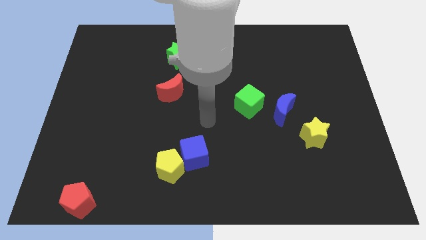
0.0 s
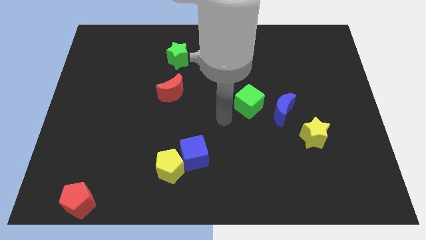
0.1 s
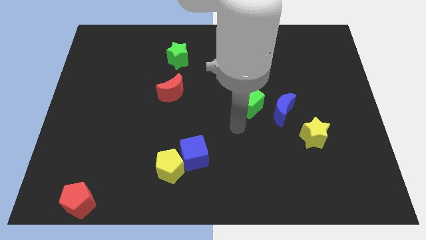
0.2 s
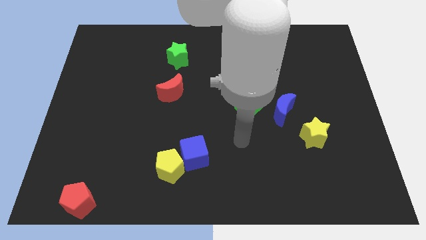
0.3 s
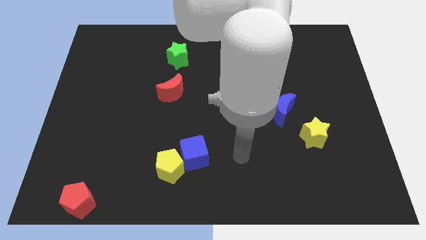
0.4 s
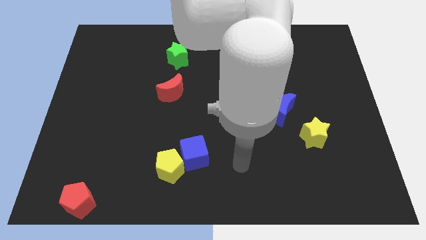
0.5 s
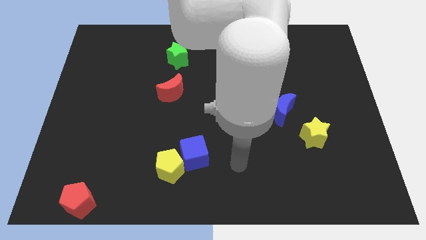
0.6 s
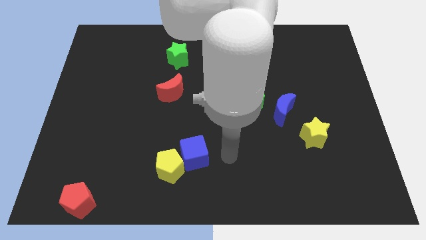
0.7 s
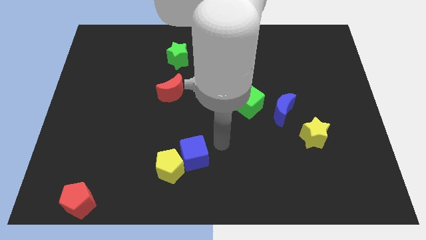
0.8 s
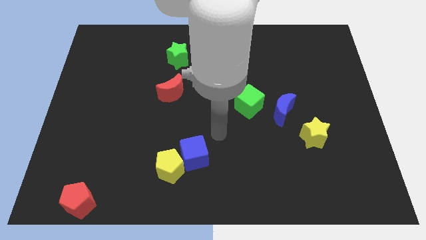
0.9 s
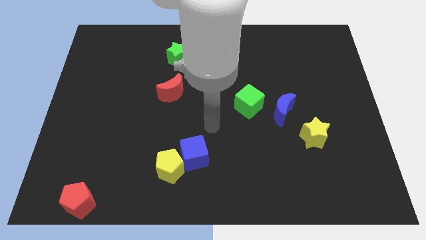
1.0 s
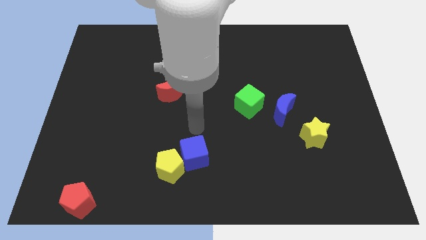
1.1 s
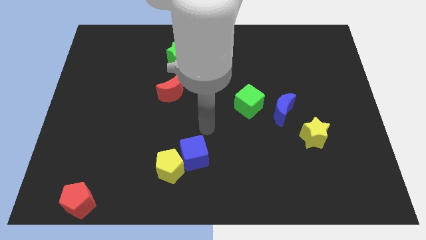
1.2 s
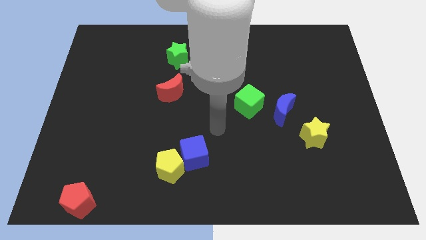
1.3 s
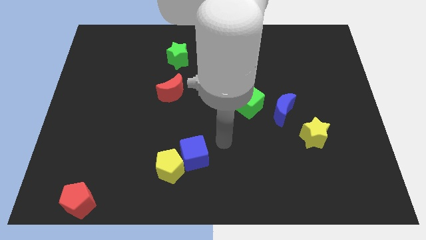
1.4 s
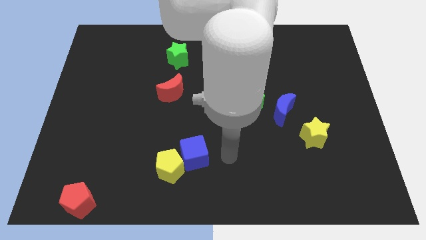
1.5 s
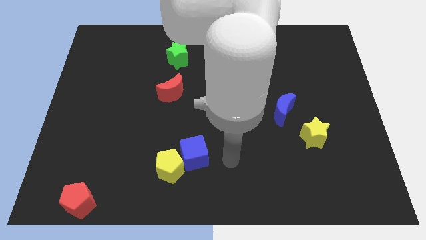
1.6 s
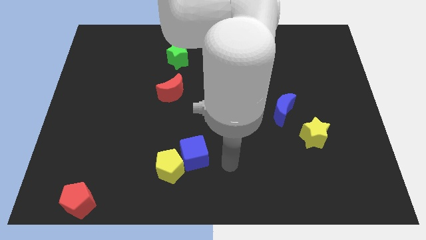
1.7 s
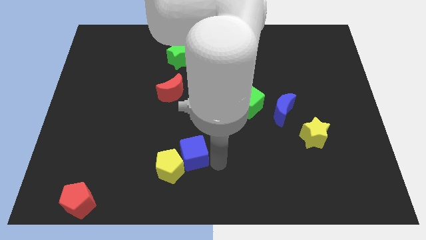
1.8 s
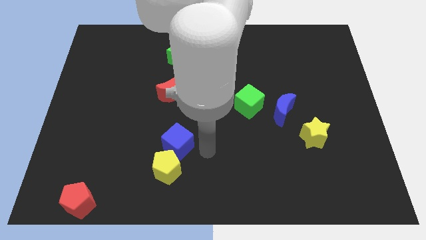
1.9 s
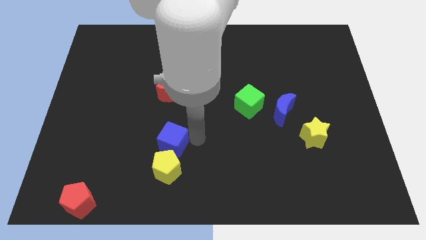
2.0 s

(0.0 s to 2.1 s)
move blue cube to the top of yellow pentagon

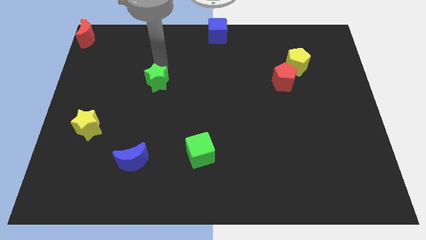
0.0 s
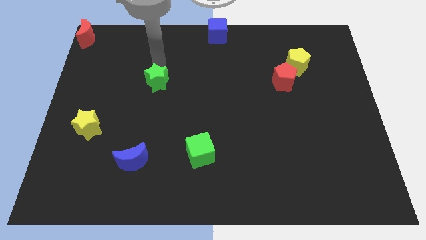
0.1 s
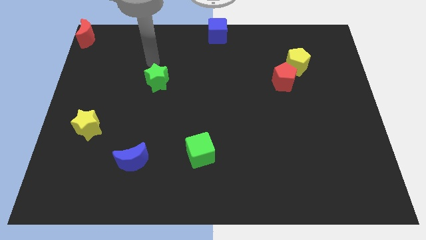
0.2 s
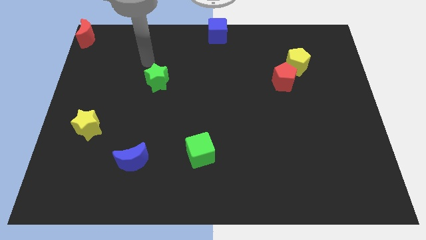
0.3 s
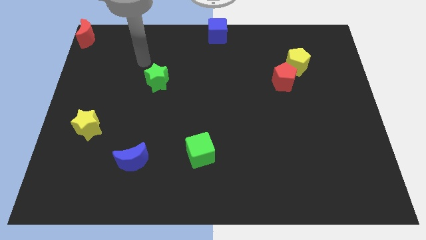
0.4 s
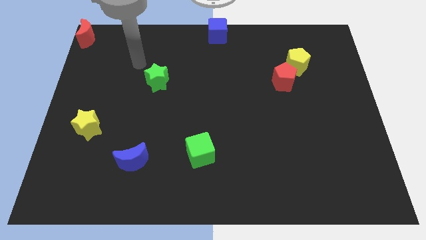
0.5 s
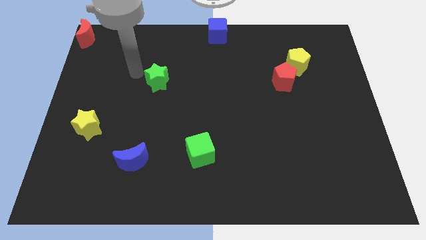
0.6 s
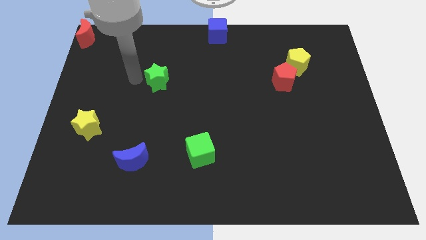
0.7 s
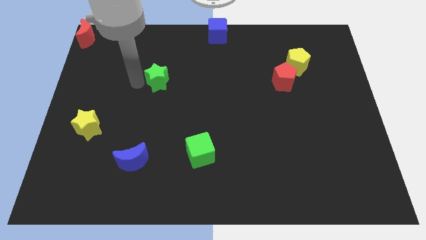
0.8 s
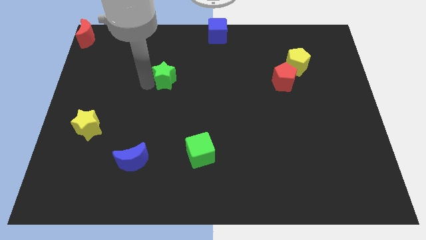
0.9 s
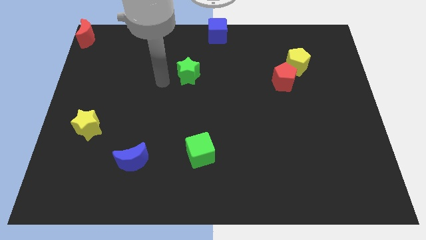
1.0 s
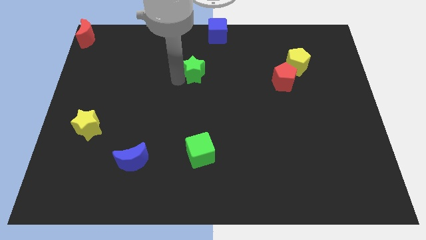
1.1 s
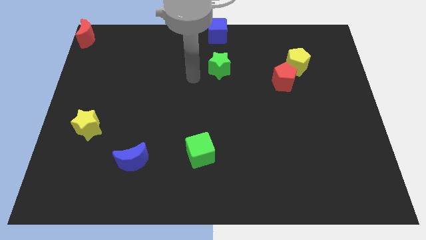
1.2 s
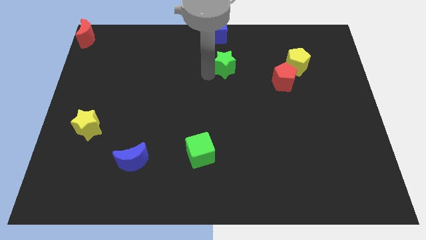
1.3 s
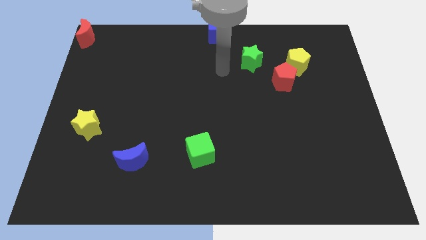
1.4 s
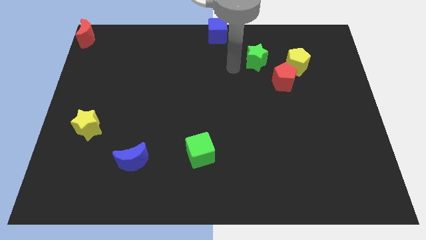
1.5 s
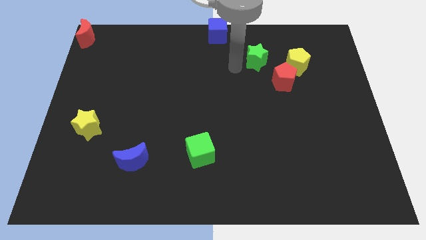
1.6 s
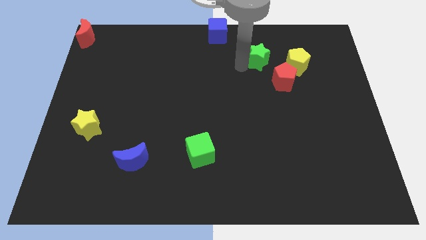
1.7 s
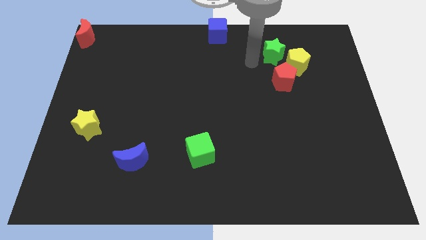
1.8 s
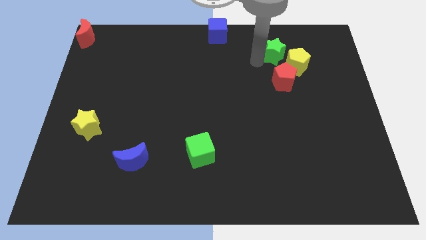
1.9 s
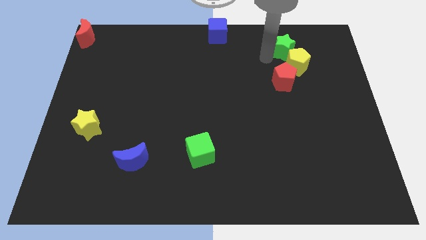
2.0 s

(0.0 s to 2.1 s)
move the green star to the top left of the yellow pentagon

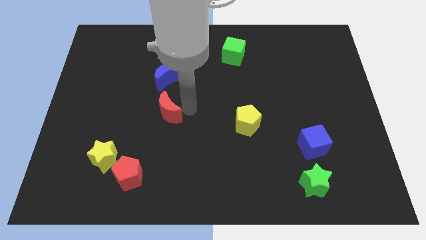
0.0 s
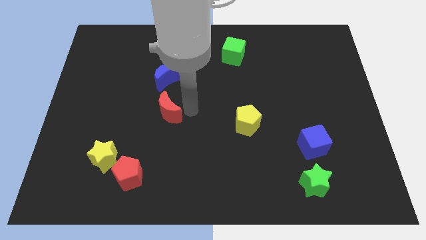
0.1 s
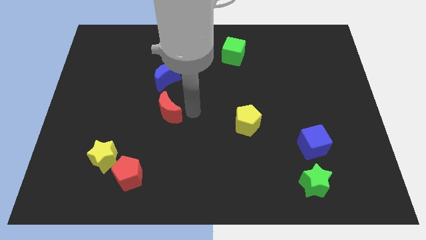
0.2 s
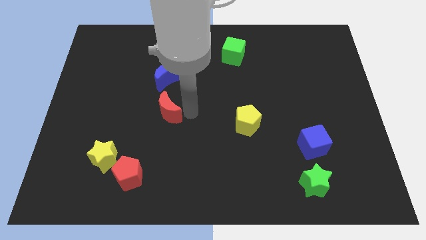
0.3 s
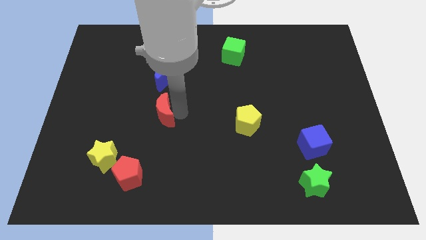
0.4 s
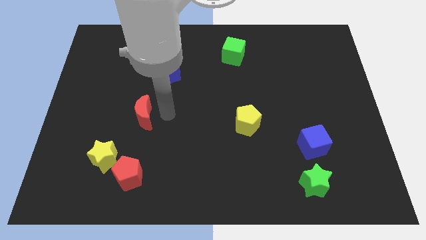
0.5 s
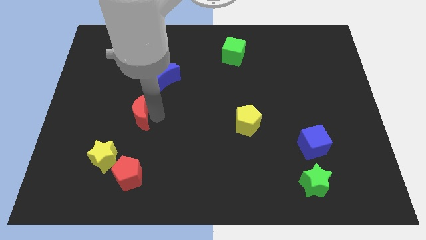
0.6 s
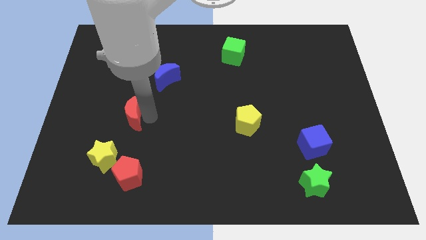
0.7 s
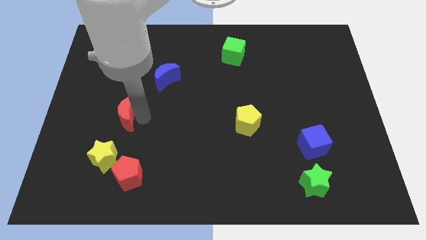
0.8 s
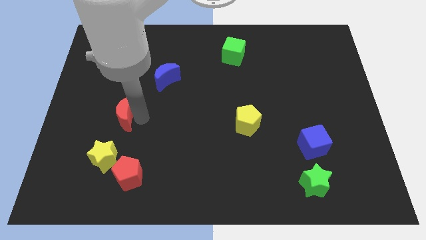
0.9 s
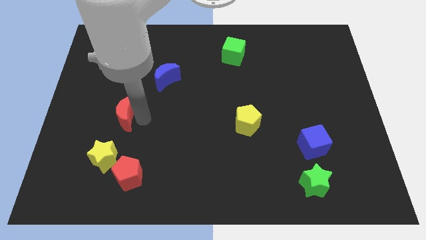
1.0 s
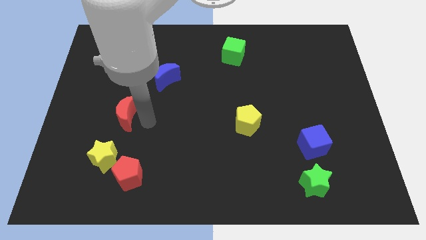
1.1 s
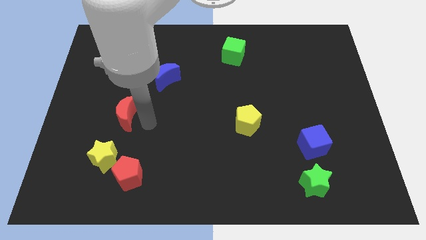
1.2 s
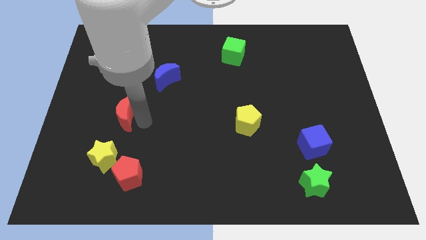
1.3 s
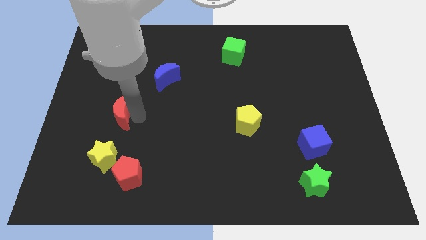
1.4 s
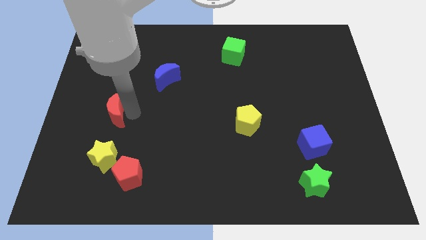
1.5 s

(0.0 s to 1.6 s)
slide the red crescent above the yellow star

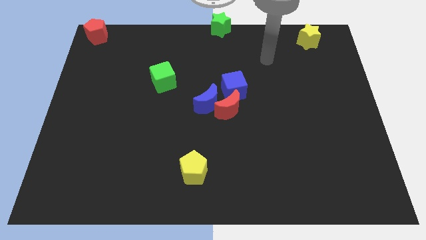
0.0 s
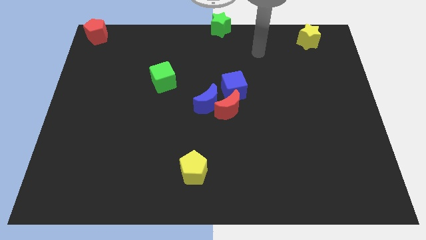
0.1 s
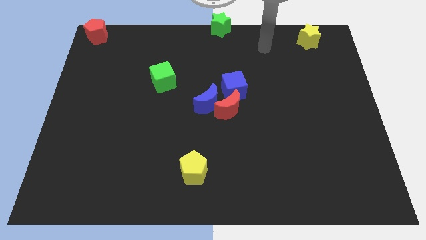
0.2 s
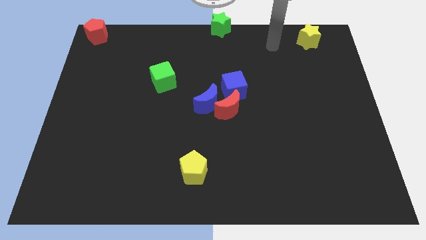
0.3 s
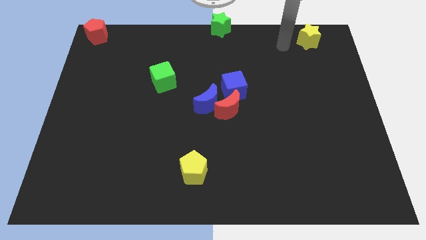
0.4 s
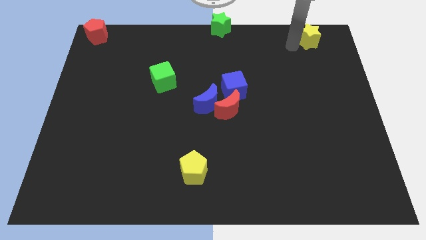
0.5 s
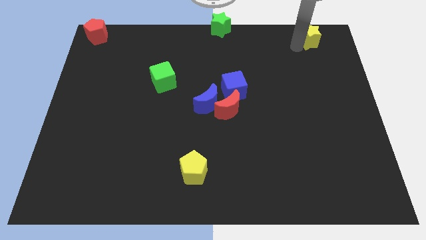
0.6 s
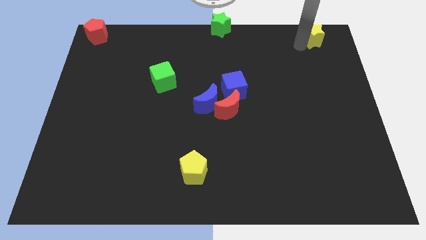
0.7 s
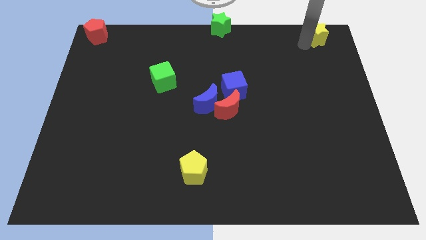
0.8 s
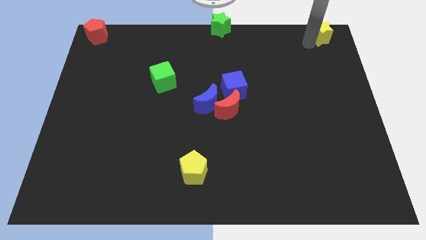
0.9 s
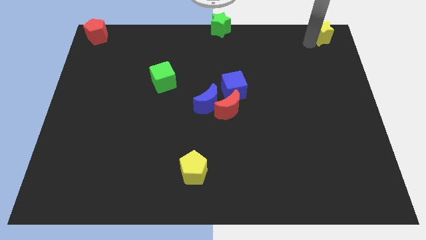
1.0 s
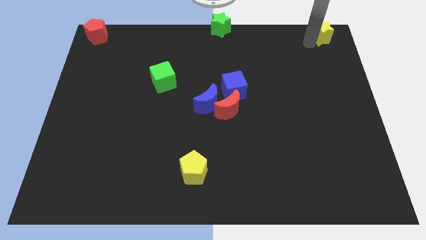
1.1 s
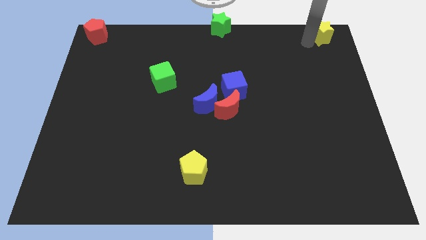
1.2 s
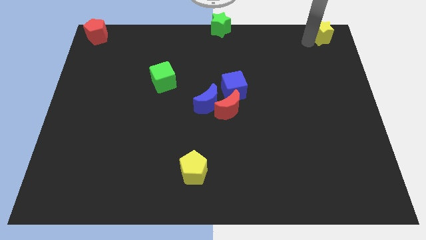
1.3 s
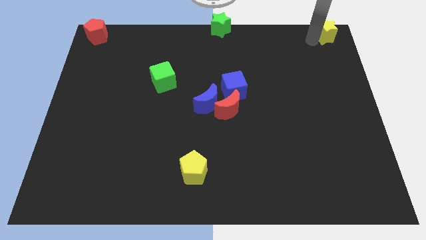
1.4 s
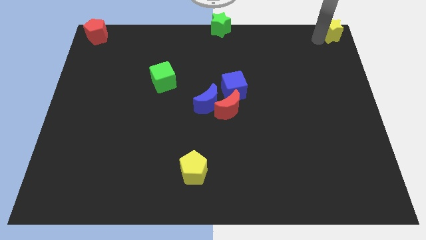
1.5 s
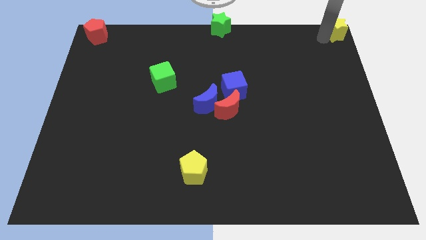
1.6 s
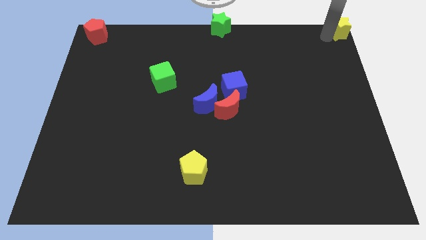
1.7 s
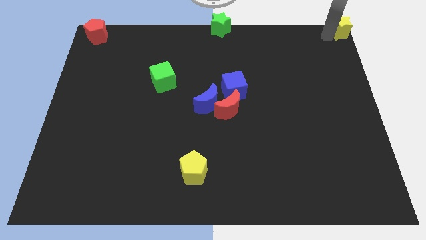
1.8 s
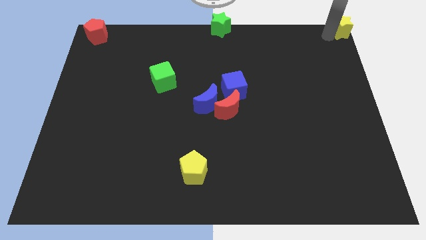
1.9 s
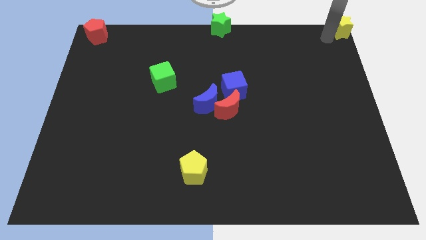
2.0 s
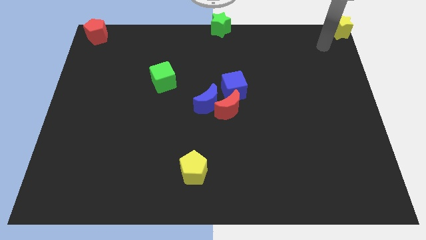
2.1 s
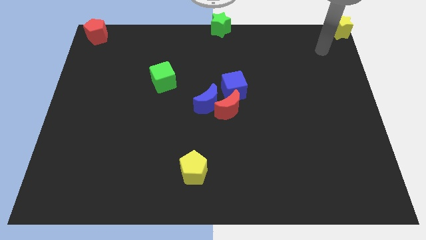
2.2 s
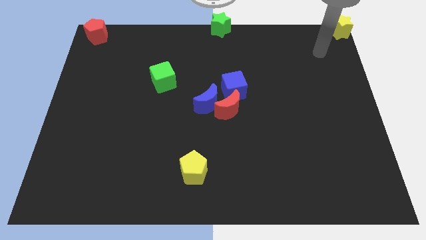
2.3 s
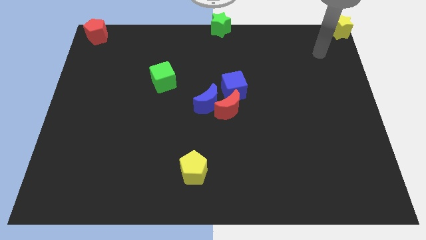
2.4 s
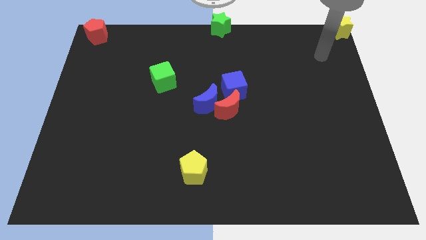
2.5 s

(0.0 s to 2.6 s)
place the yellow star to top right corner of the board

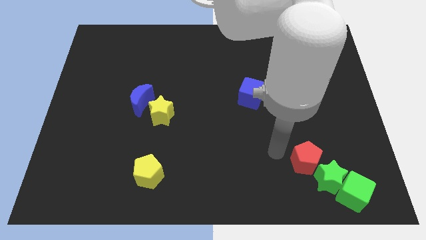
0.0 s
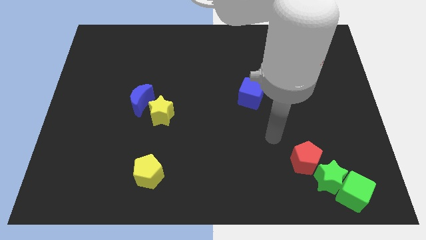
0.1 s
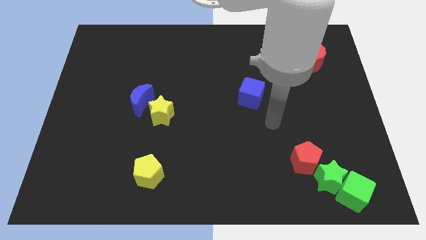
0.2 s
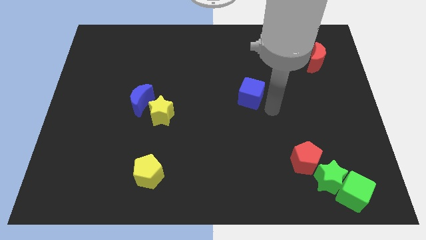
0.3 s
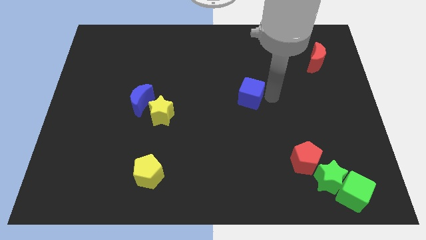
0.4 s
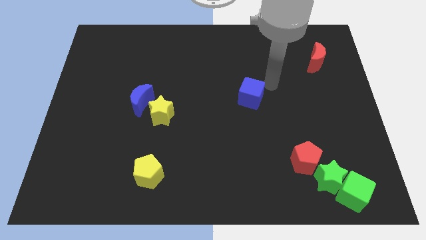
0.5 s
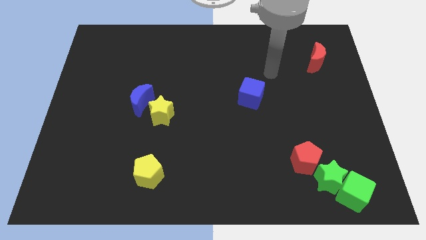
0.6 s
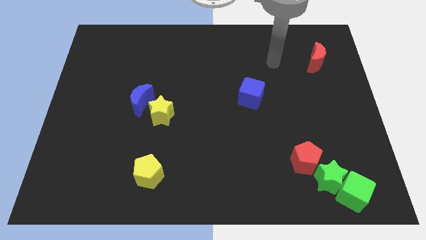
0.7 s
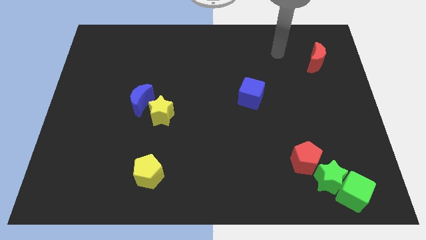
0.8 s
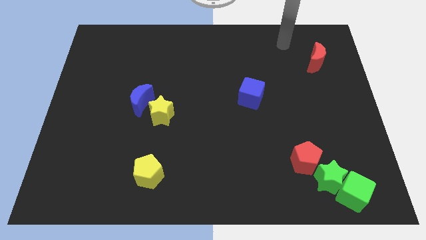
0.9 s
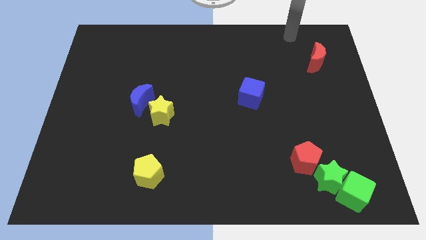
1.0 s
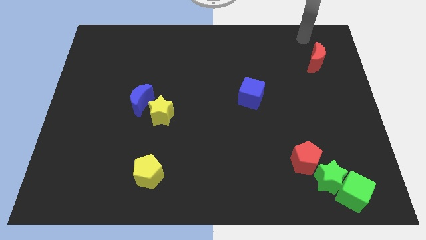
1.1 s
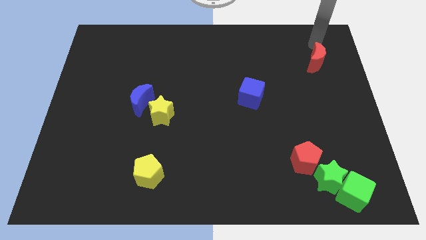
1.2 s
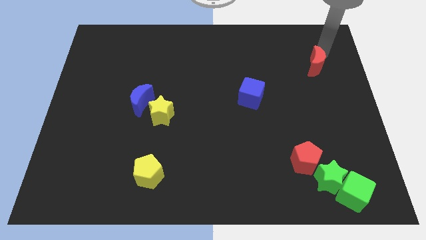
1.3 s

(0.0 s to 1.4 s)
move your arm at the top side the red moon
